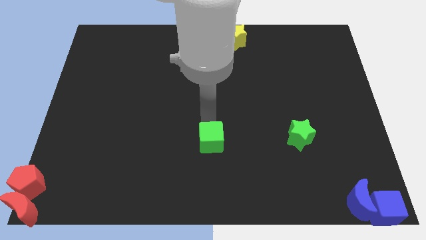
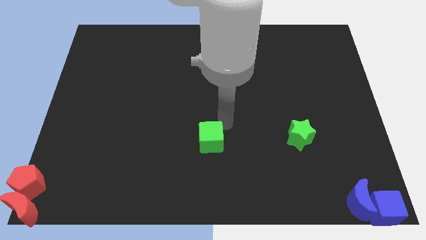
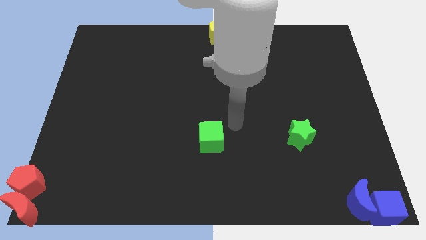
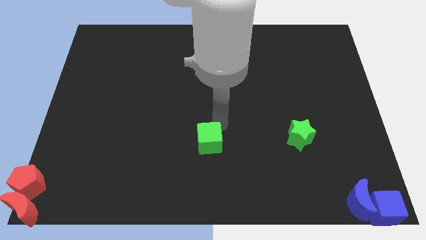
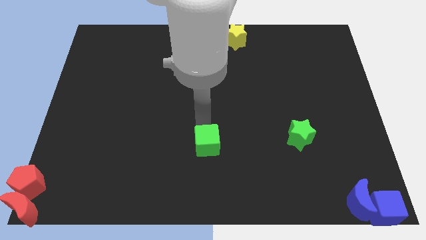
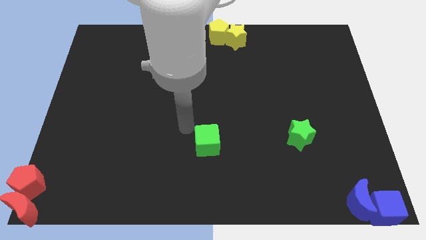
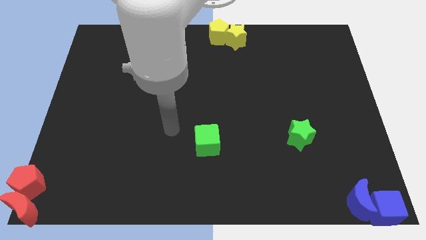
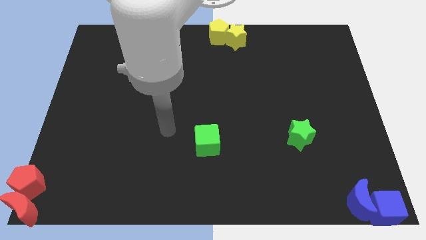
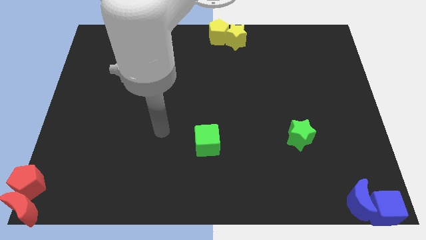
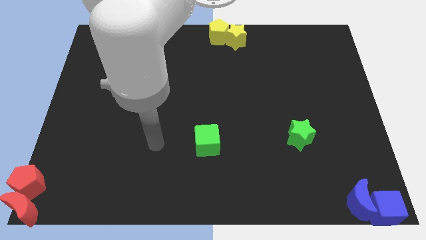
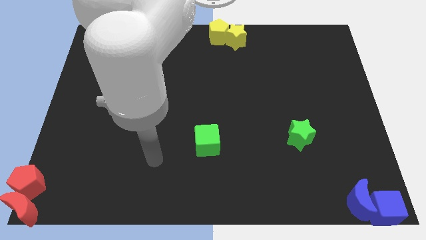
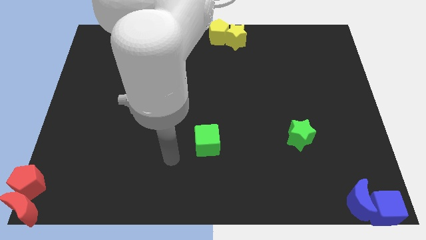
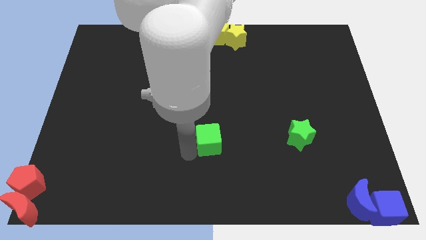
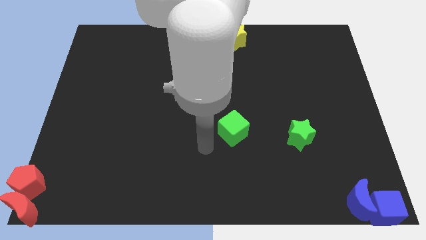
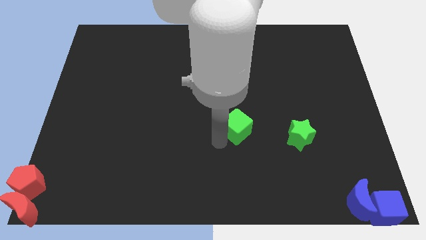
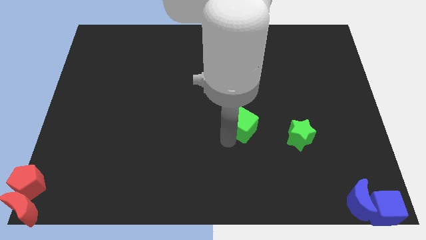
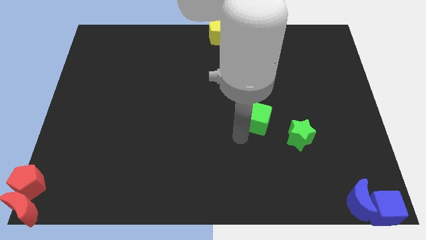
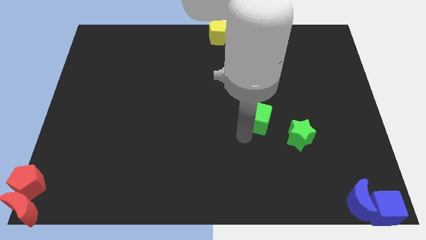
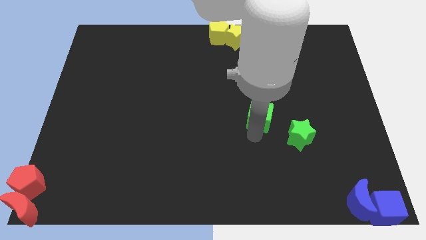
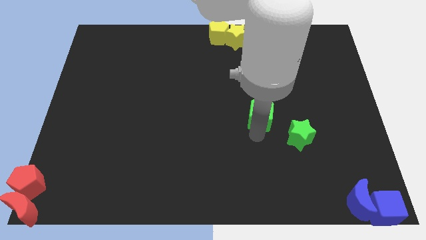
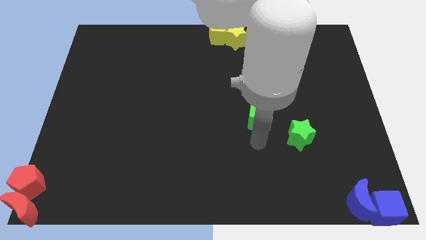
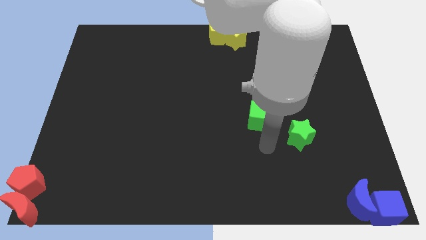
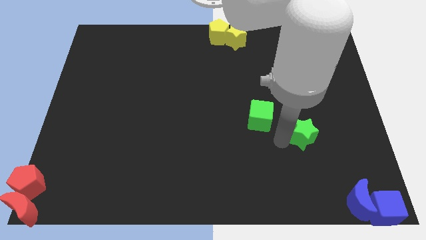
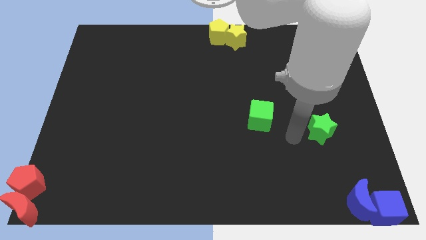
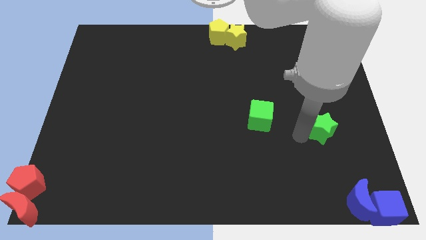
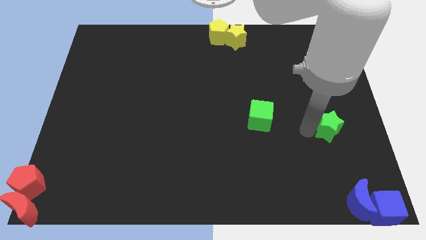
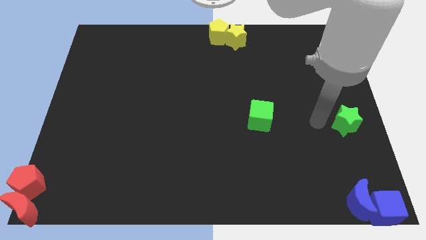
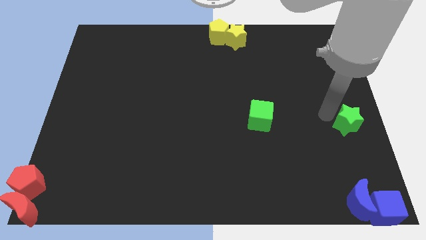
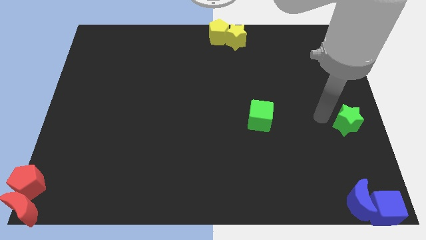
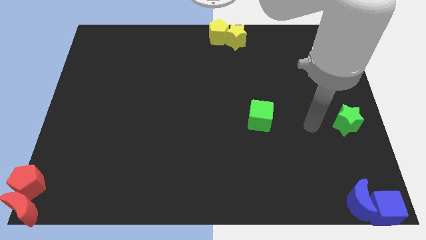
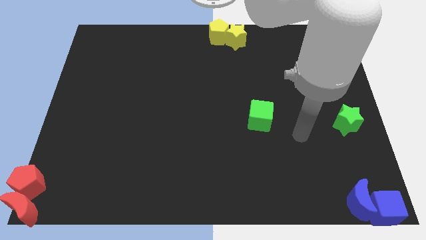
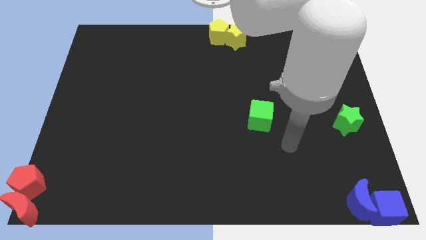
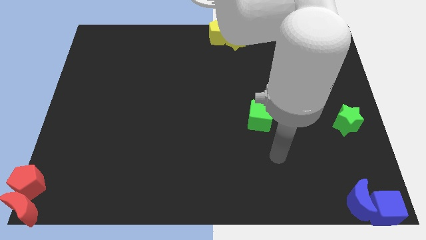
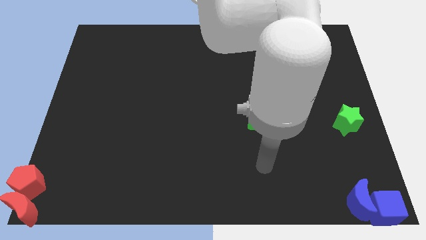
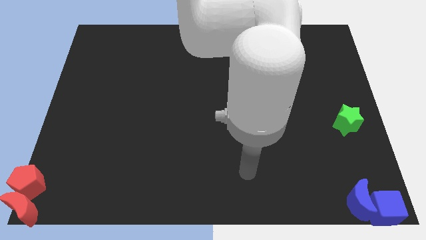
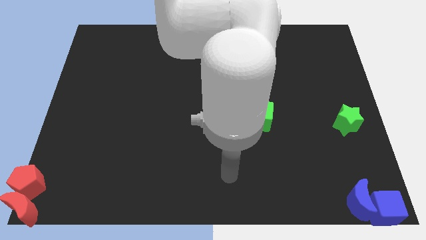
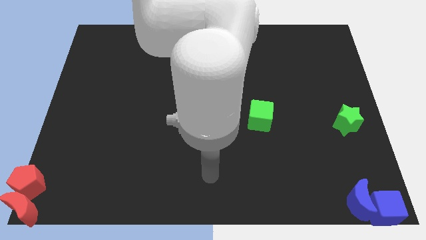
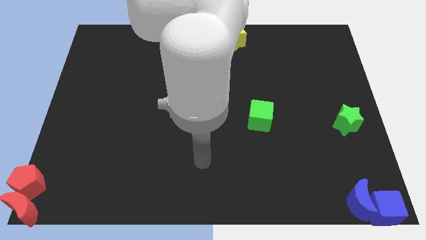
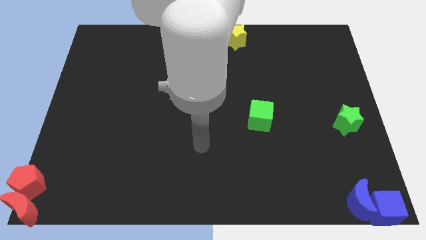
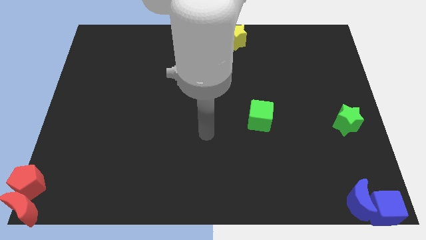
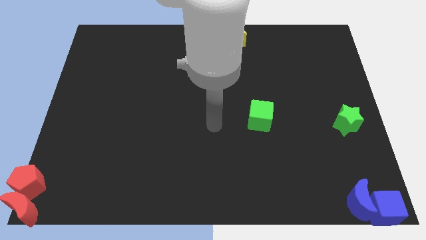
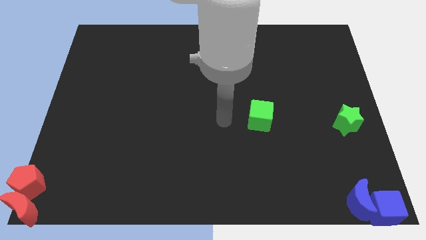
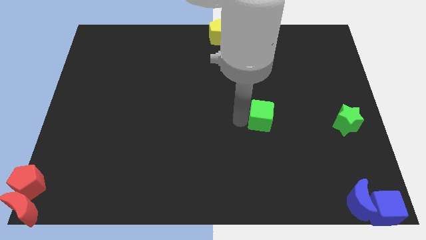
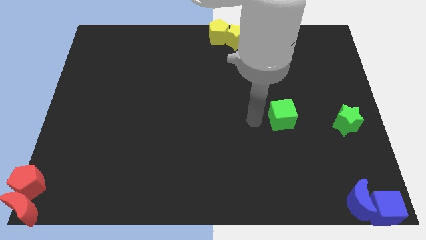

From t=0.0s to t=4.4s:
move the green star vertically on top of the blue cube

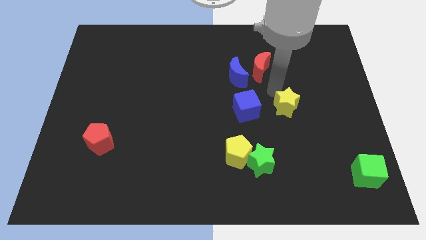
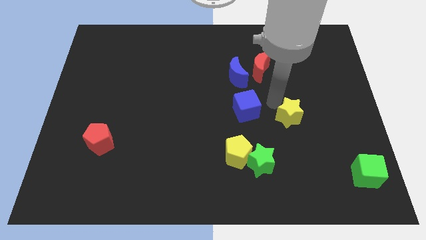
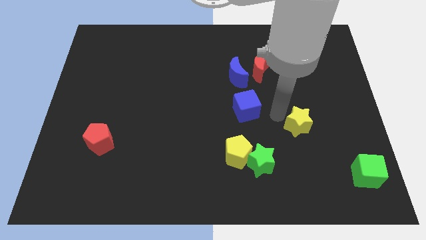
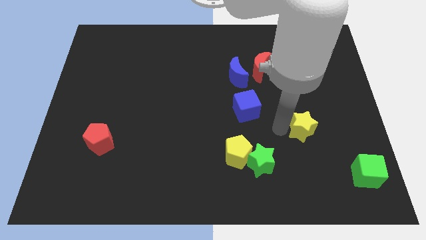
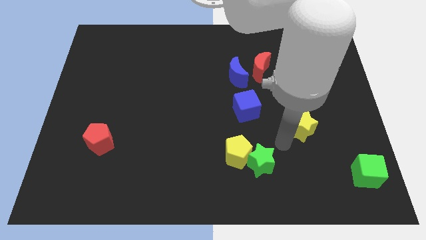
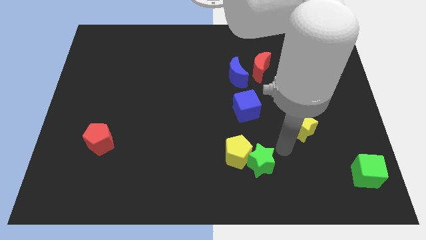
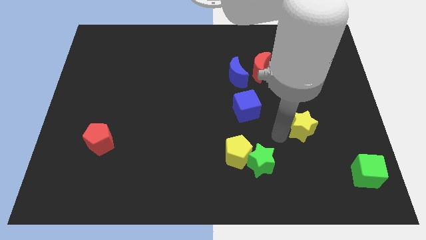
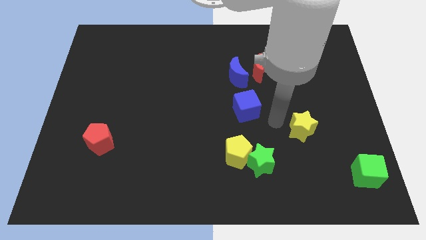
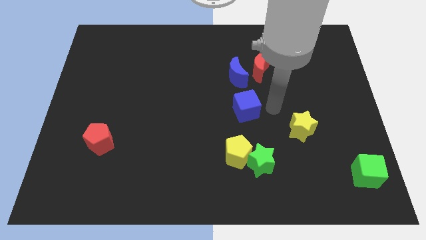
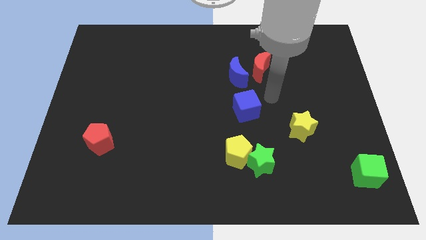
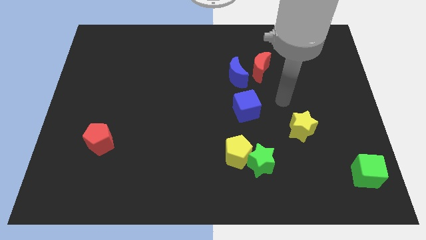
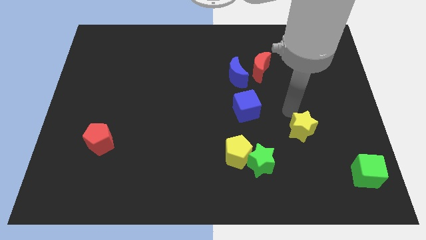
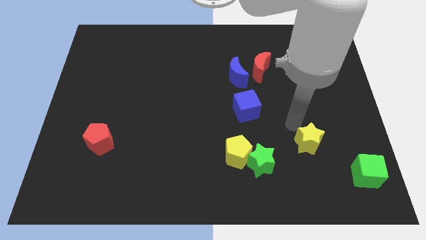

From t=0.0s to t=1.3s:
place the yellow star in between the cubes

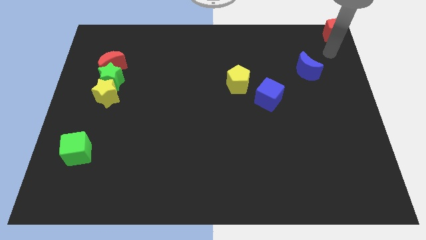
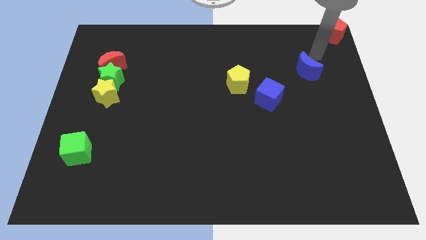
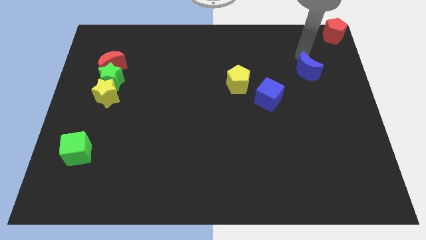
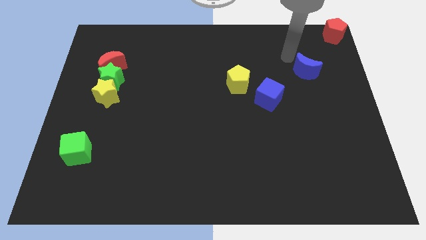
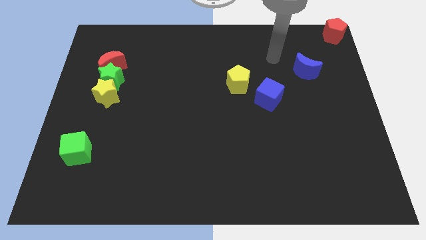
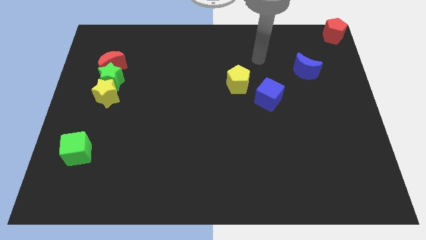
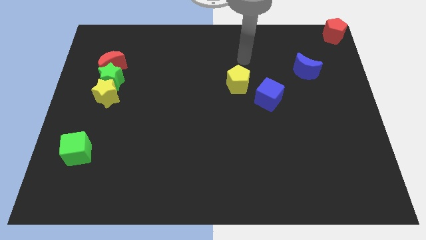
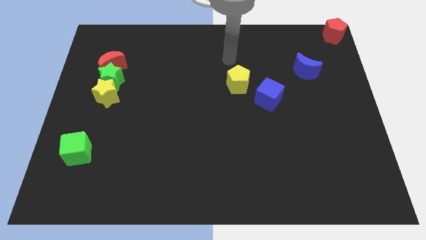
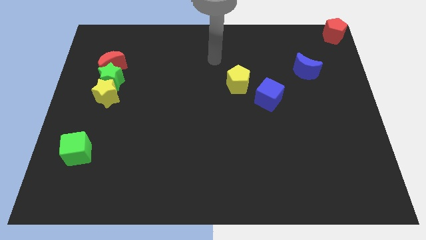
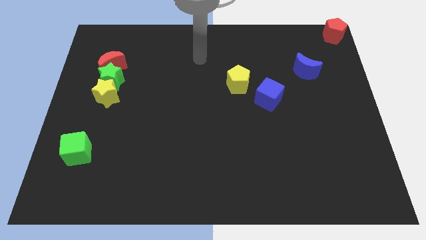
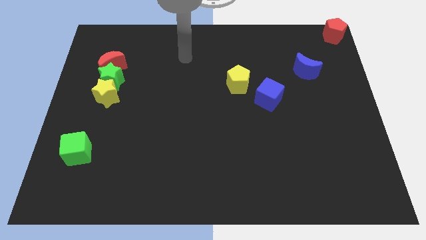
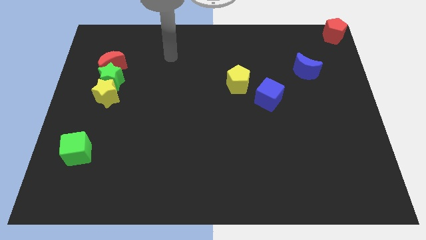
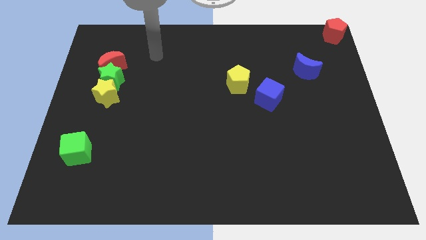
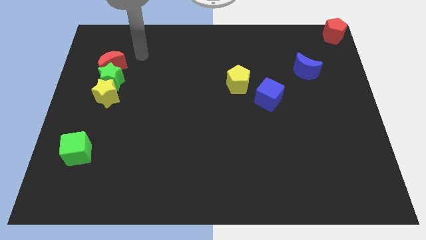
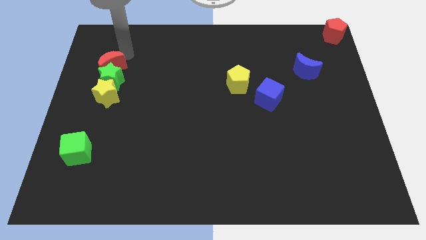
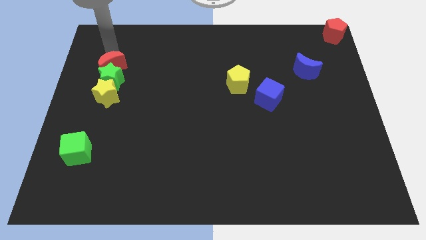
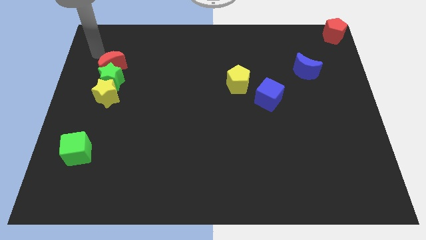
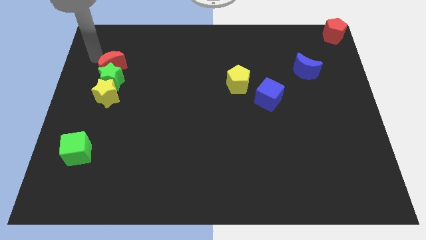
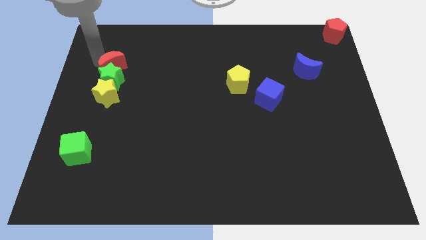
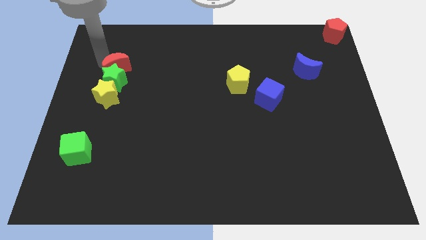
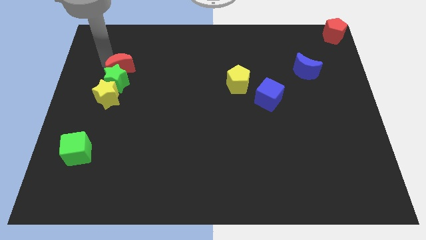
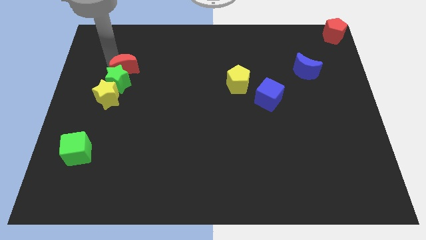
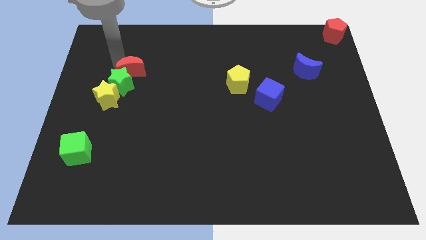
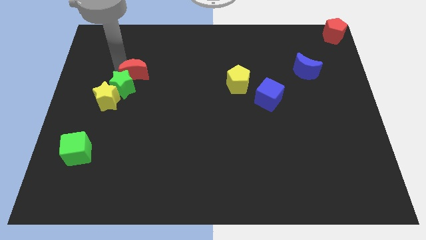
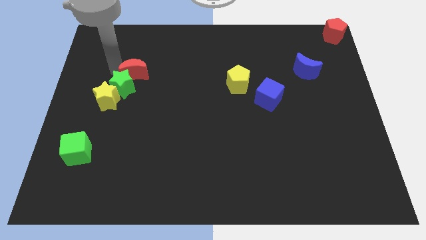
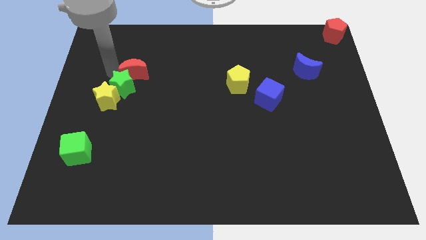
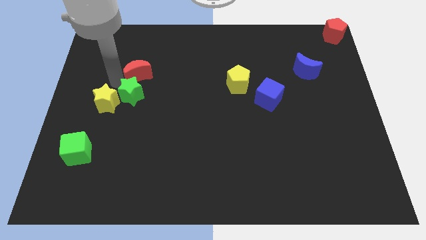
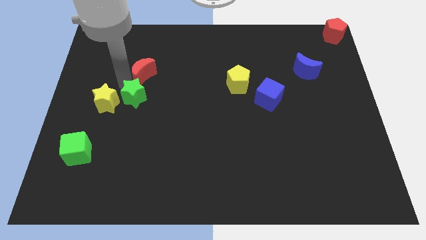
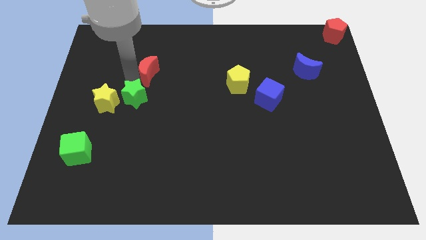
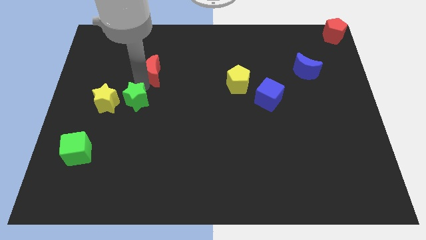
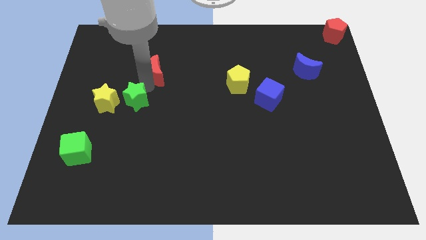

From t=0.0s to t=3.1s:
separate red moon from green star

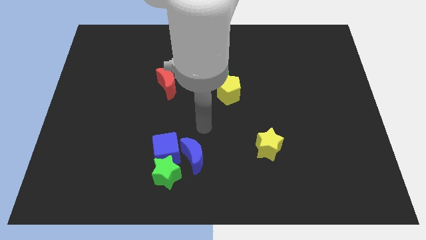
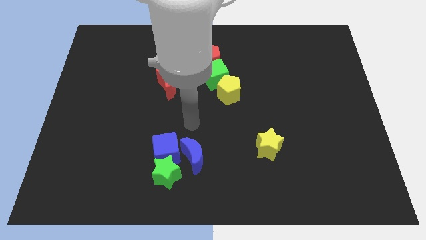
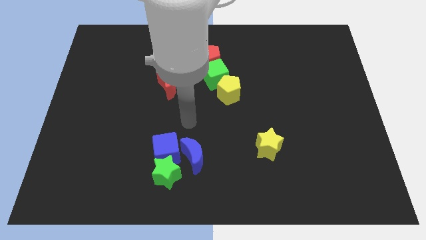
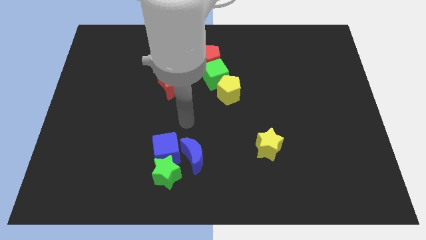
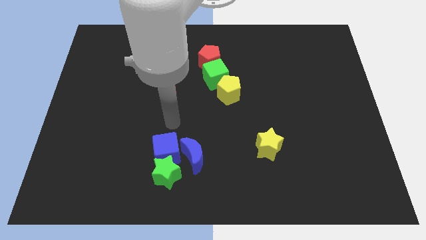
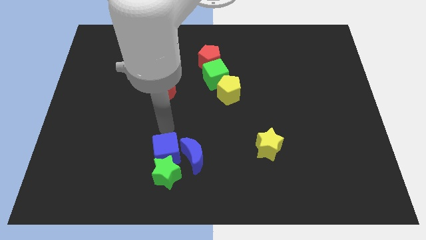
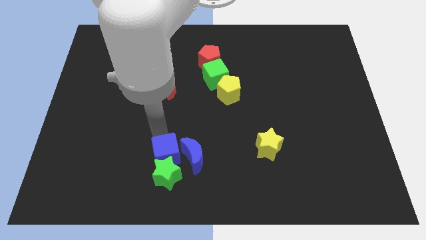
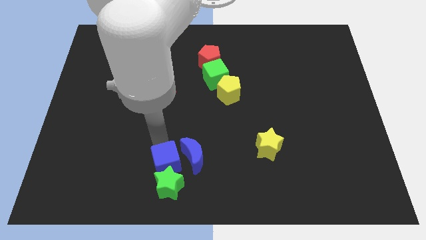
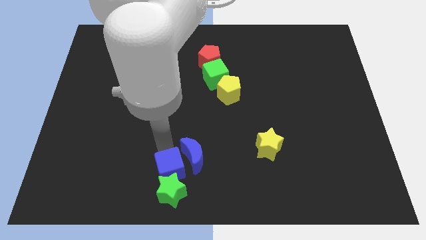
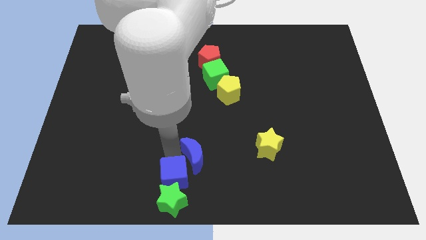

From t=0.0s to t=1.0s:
push the blue cube along with the green star to the bottom
